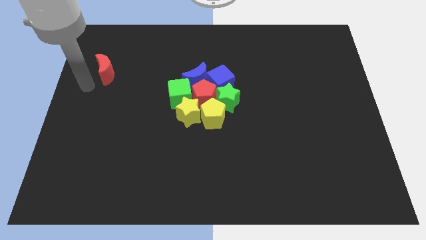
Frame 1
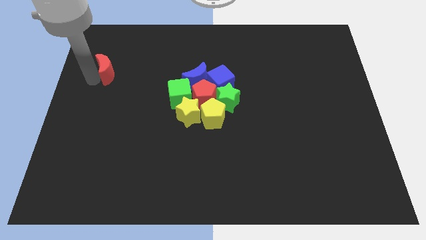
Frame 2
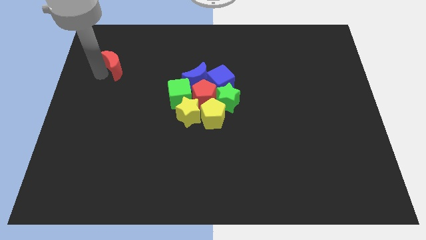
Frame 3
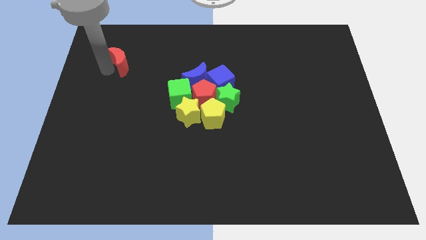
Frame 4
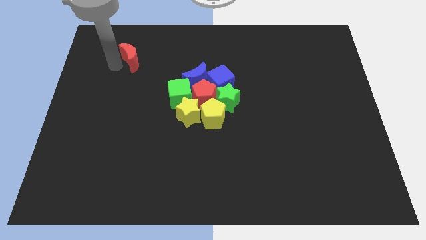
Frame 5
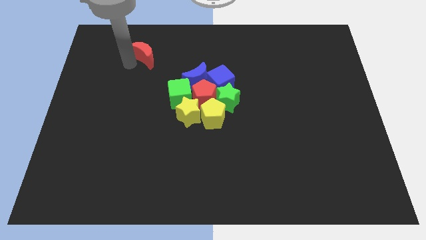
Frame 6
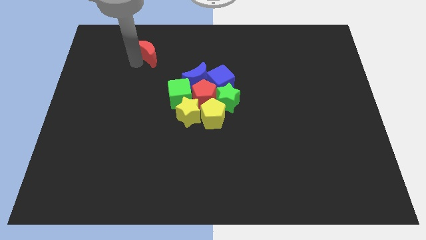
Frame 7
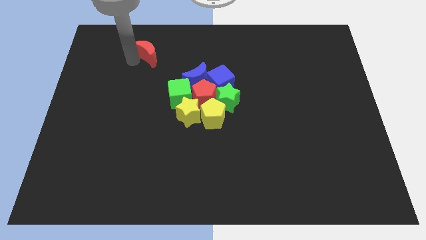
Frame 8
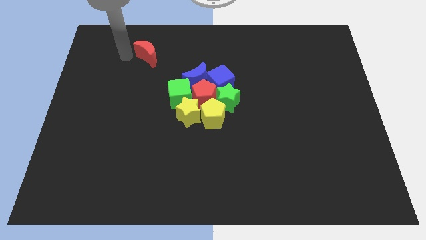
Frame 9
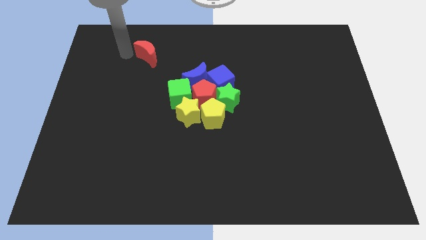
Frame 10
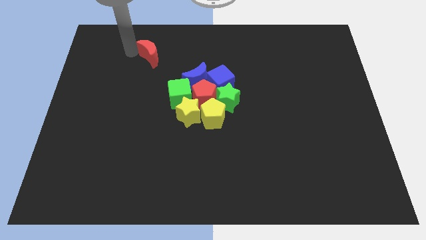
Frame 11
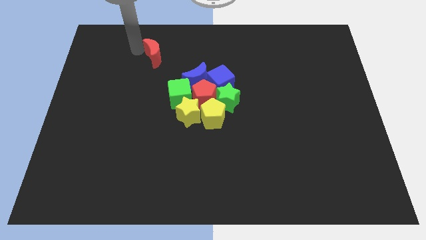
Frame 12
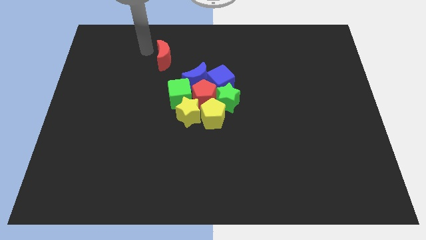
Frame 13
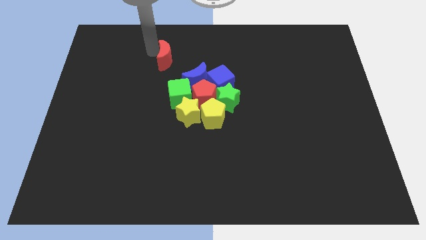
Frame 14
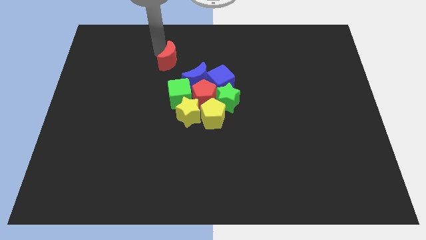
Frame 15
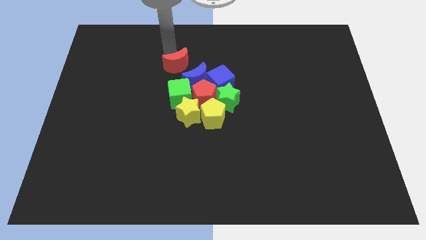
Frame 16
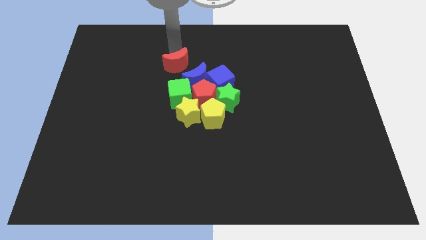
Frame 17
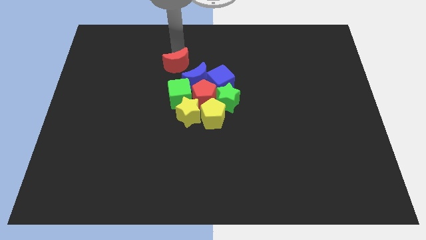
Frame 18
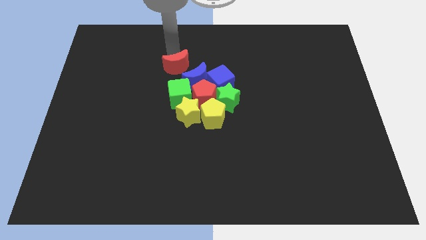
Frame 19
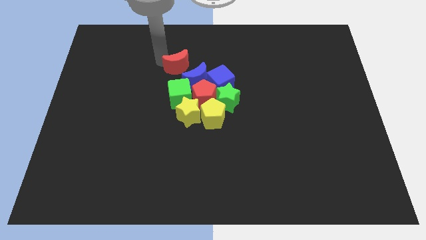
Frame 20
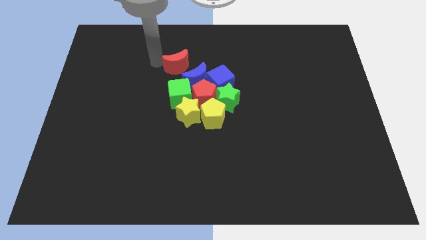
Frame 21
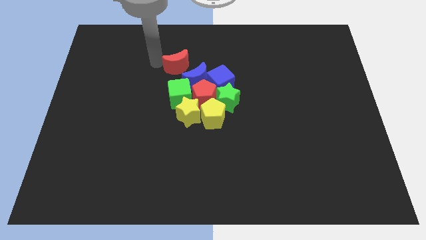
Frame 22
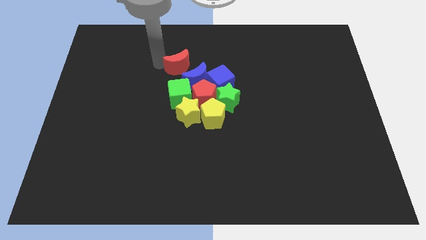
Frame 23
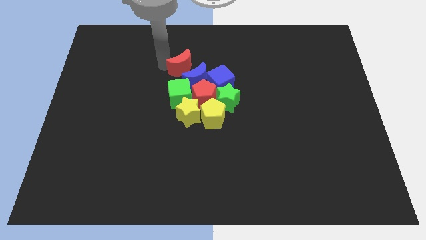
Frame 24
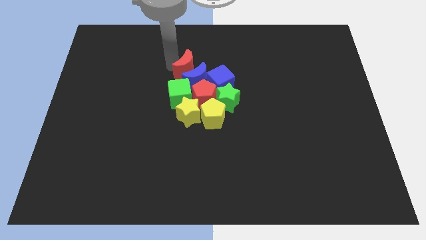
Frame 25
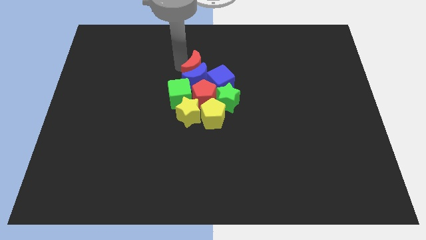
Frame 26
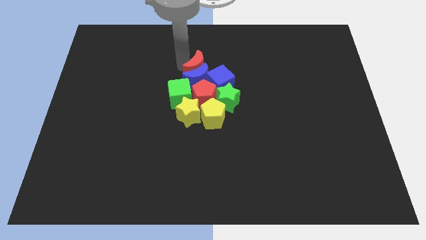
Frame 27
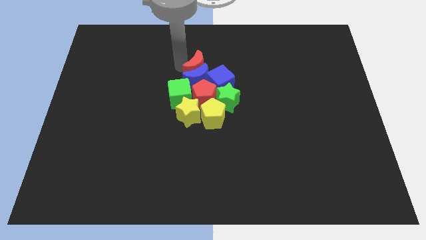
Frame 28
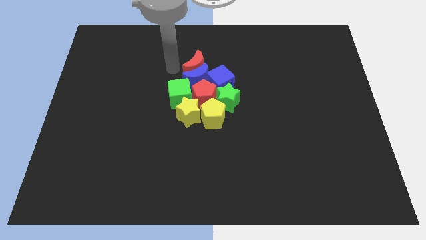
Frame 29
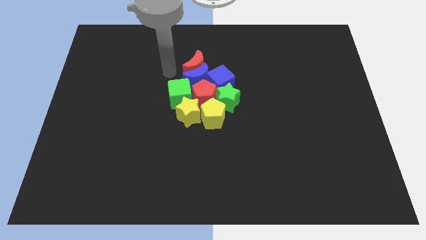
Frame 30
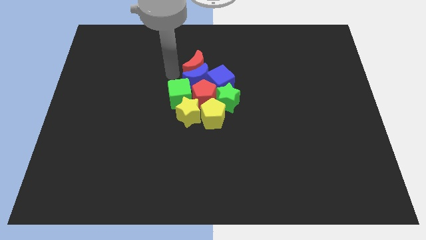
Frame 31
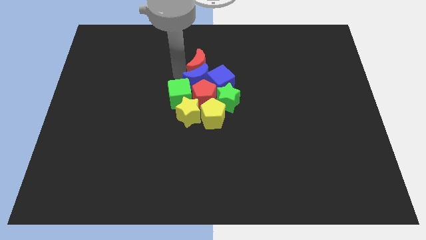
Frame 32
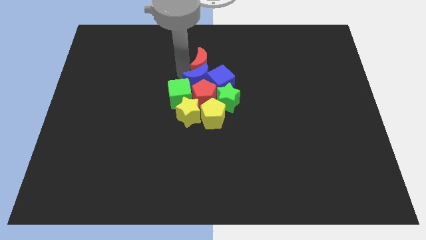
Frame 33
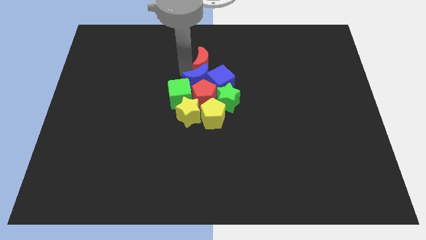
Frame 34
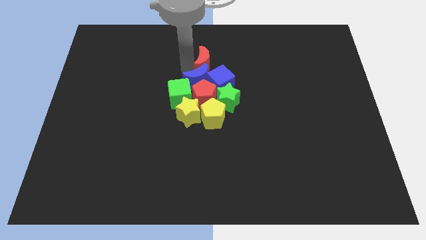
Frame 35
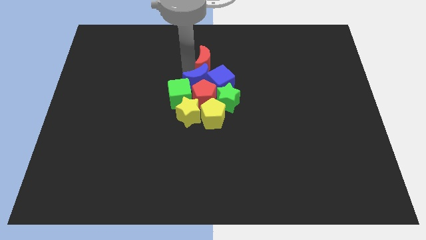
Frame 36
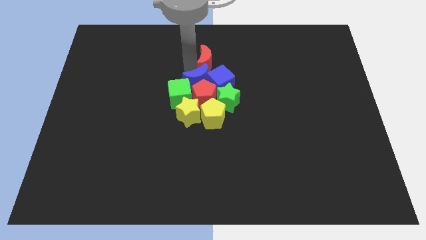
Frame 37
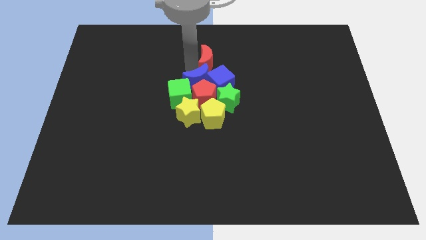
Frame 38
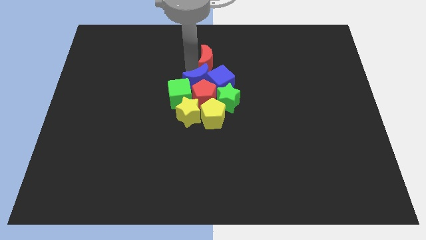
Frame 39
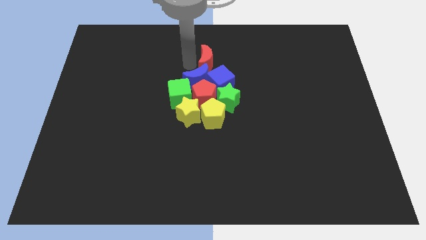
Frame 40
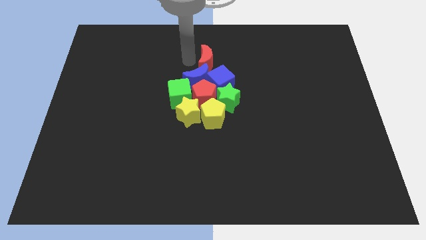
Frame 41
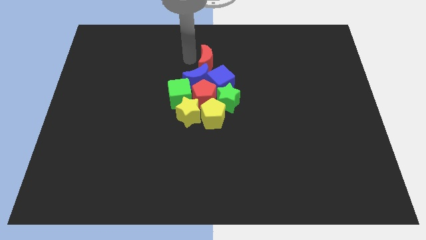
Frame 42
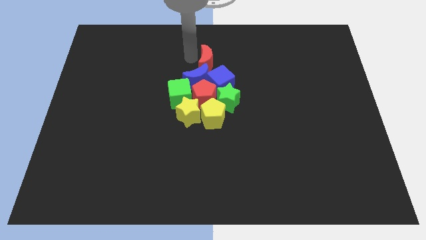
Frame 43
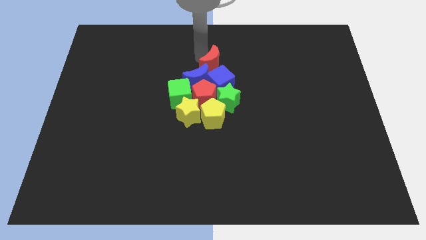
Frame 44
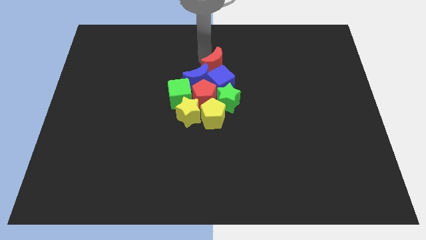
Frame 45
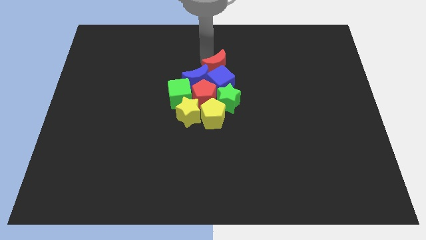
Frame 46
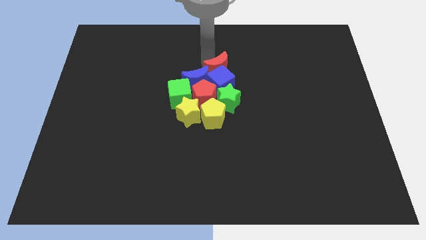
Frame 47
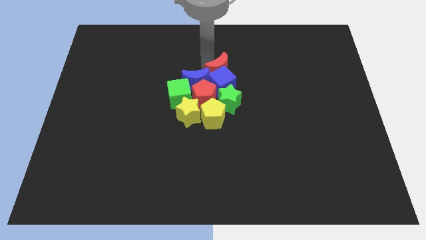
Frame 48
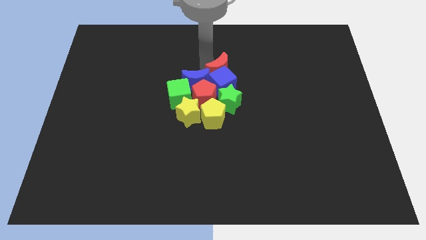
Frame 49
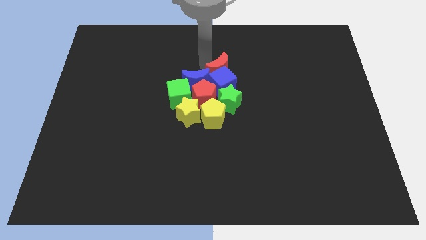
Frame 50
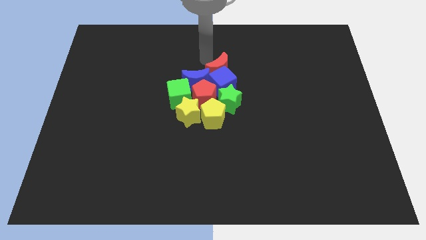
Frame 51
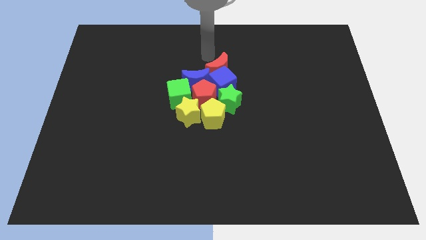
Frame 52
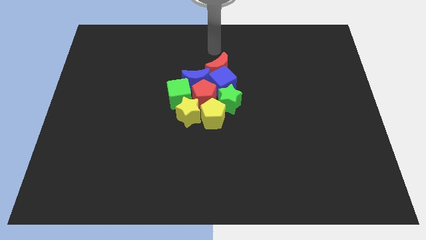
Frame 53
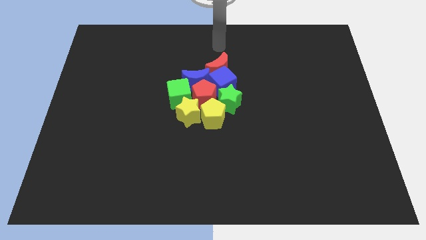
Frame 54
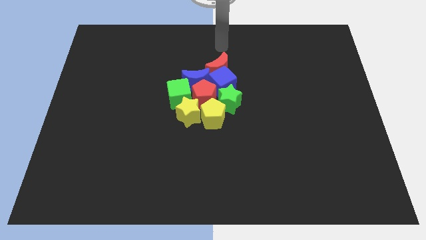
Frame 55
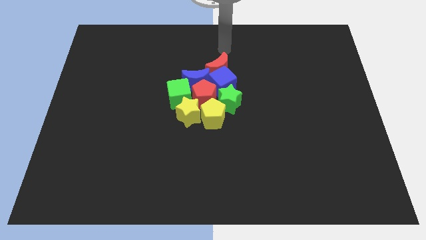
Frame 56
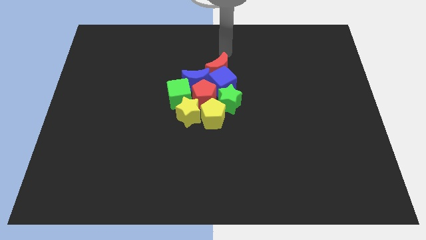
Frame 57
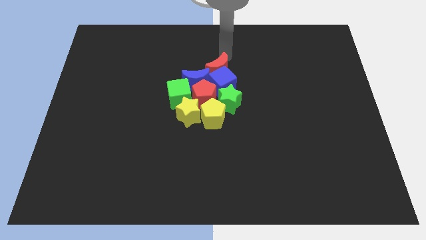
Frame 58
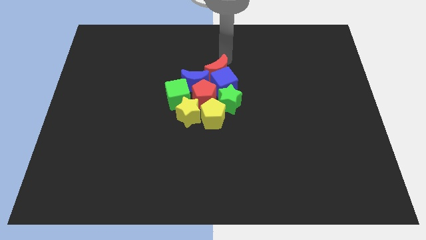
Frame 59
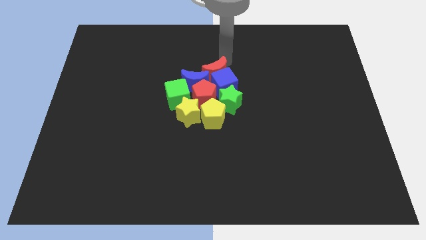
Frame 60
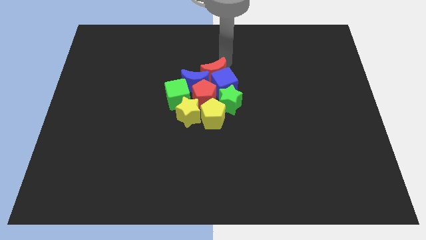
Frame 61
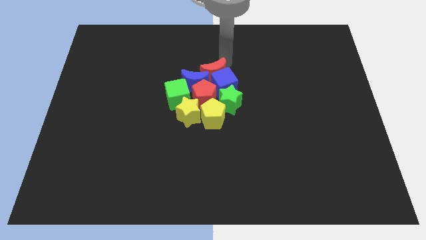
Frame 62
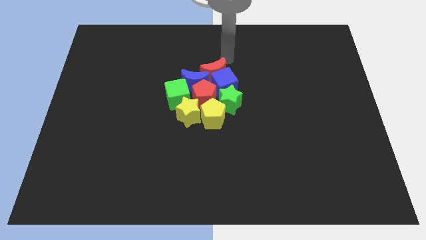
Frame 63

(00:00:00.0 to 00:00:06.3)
push the red crescent into the blue cube

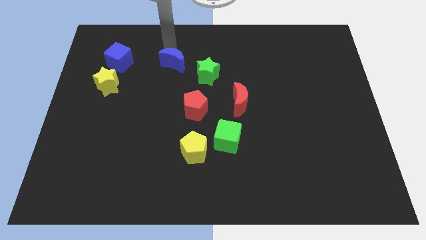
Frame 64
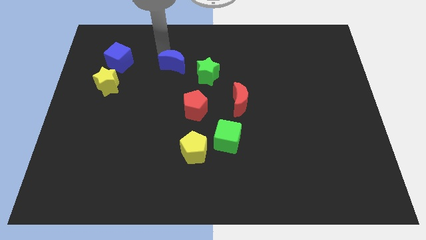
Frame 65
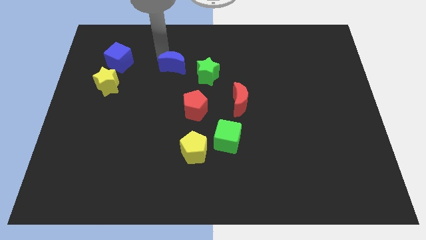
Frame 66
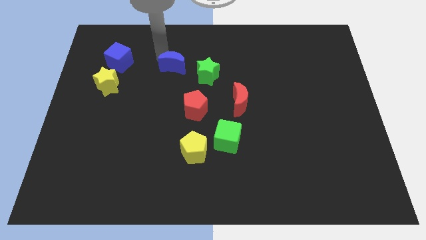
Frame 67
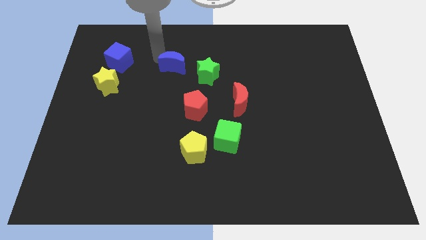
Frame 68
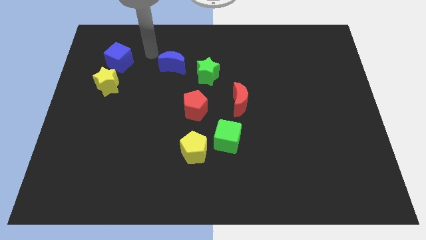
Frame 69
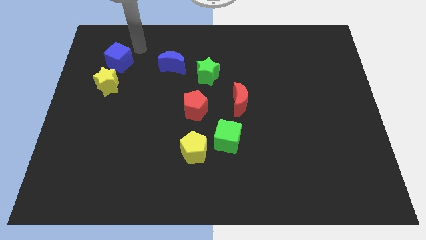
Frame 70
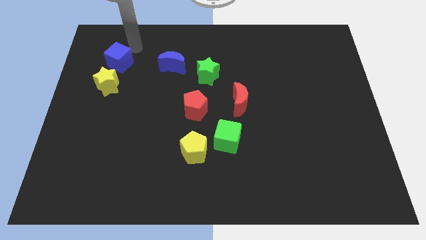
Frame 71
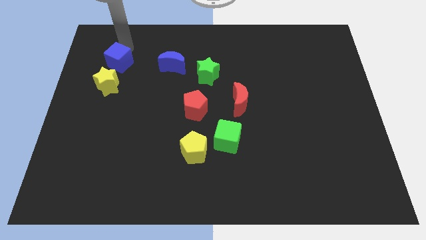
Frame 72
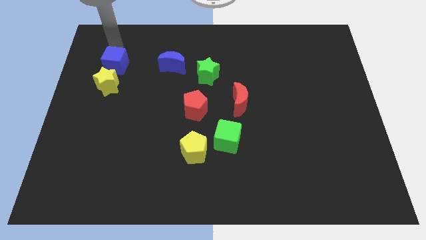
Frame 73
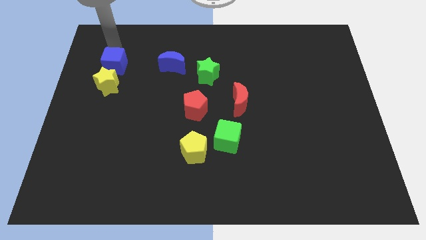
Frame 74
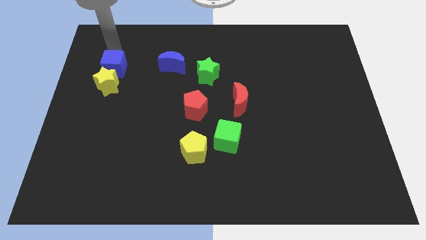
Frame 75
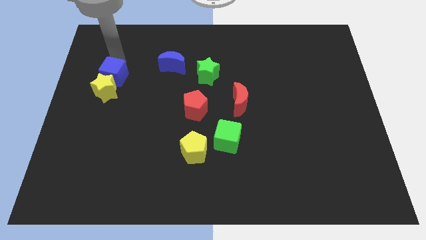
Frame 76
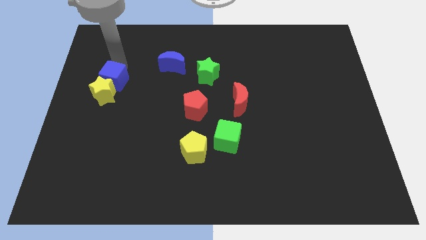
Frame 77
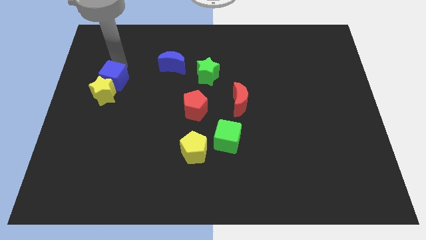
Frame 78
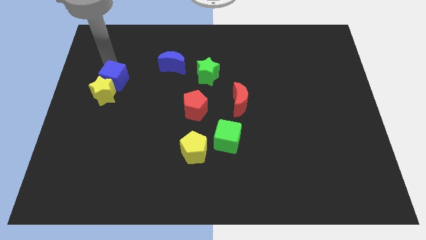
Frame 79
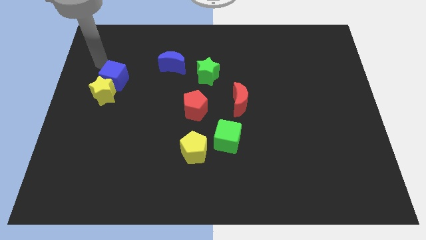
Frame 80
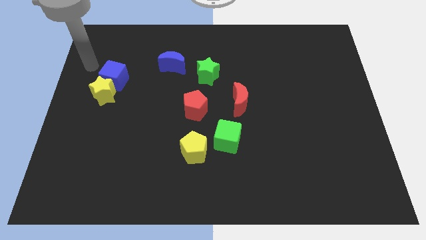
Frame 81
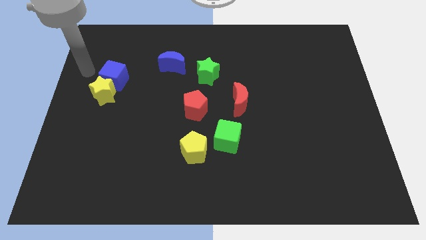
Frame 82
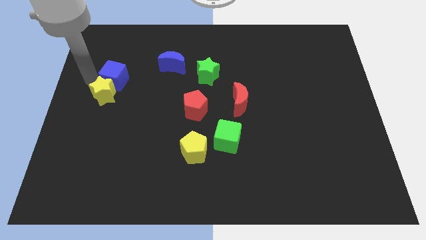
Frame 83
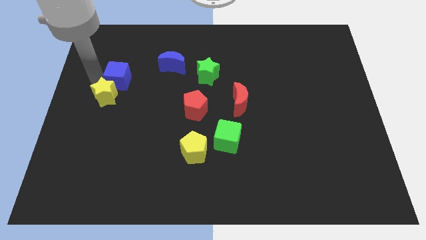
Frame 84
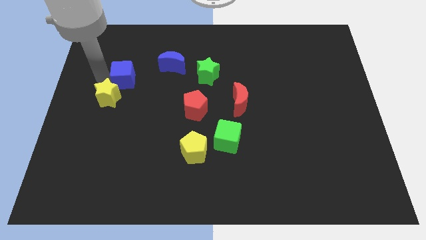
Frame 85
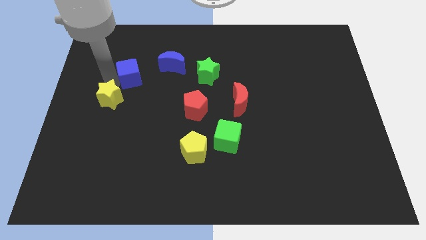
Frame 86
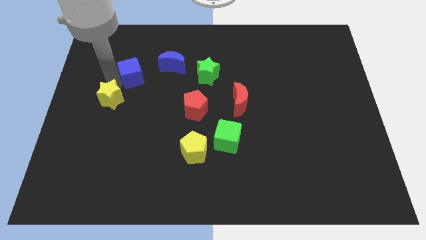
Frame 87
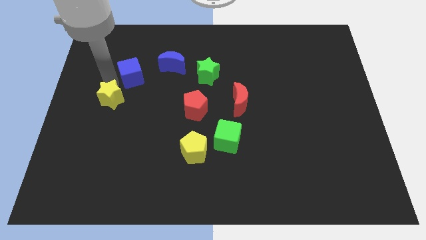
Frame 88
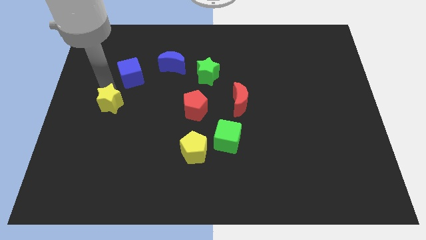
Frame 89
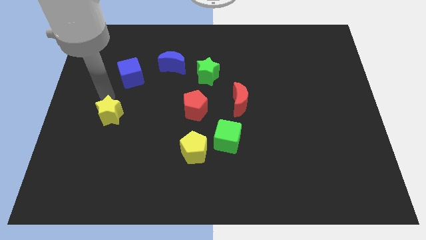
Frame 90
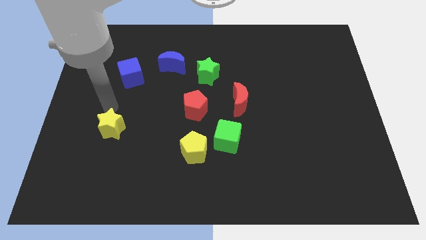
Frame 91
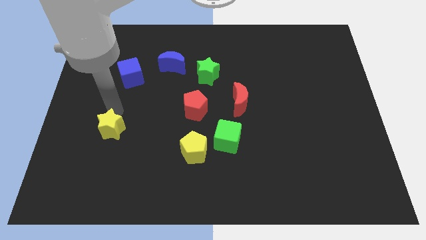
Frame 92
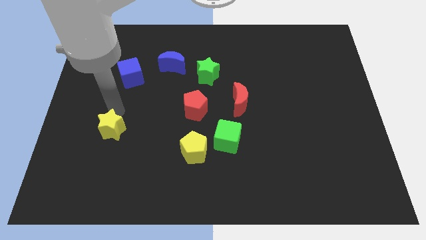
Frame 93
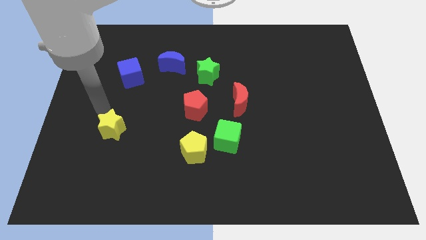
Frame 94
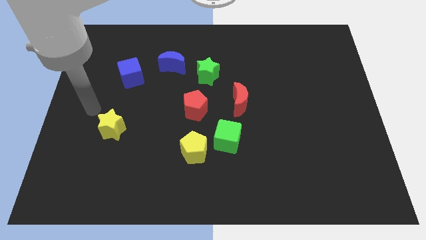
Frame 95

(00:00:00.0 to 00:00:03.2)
separate yellow star from blue cube
